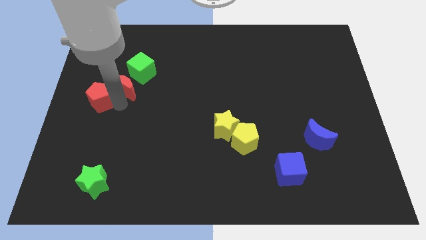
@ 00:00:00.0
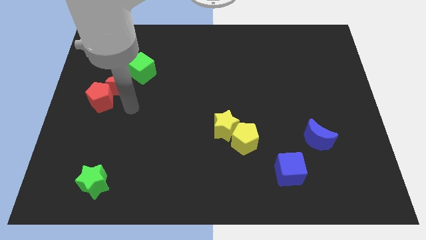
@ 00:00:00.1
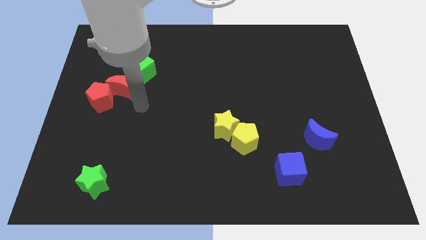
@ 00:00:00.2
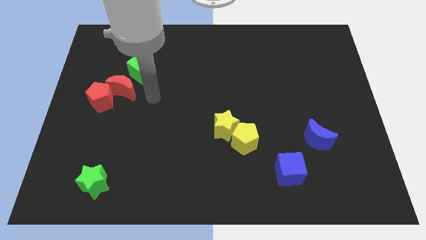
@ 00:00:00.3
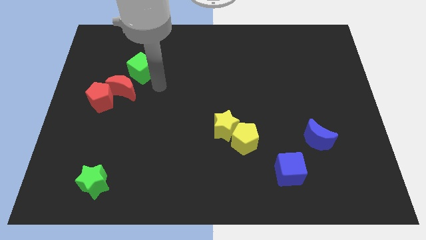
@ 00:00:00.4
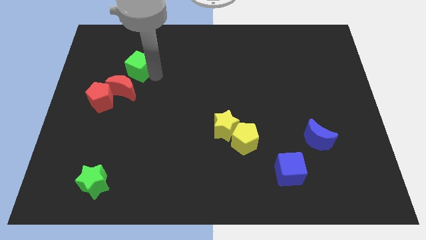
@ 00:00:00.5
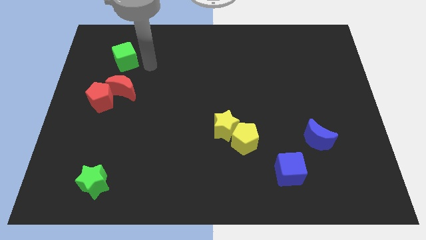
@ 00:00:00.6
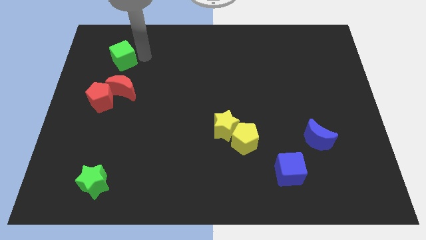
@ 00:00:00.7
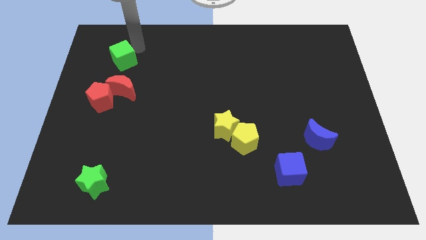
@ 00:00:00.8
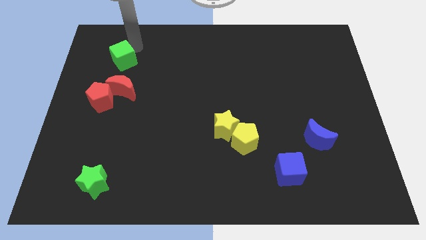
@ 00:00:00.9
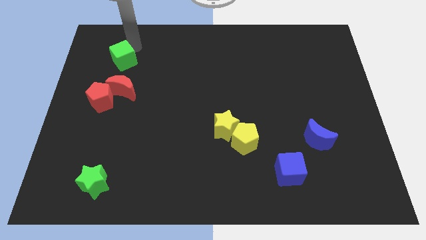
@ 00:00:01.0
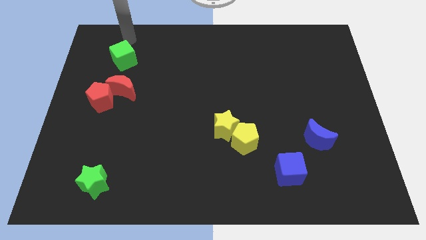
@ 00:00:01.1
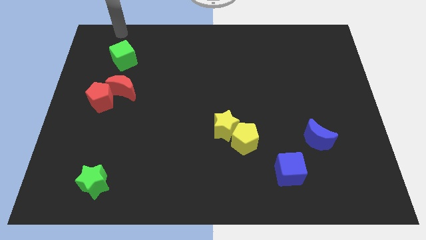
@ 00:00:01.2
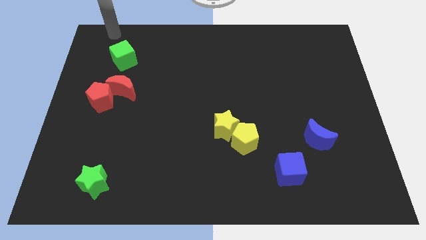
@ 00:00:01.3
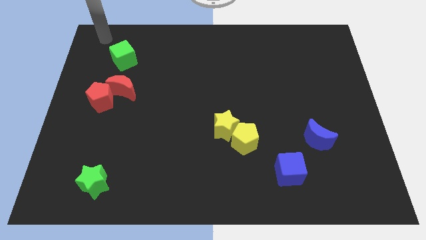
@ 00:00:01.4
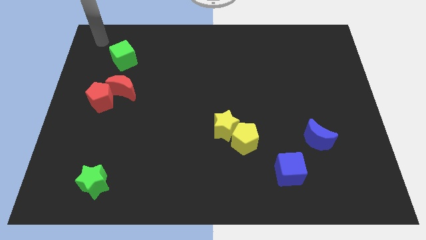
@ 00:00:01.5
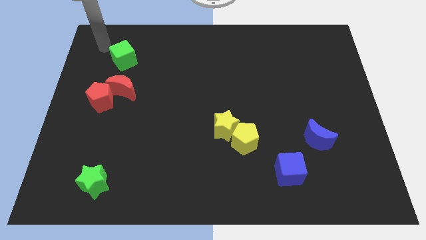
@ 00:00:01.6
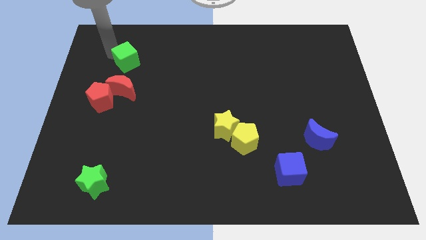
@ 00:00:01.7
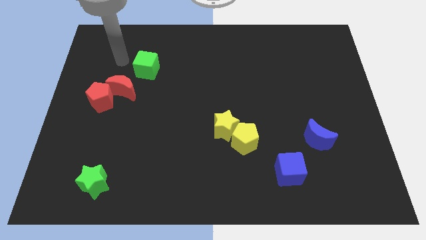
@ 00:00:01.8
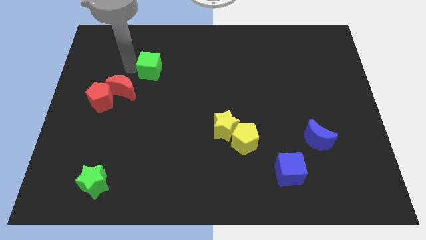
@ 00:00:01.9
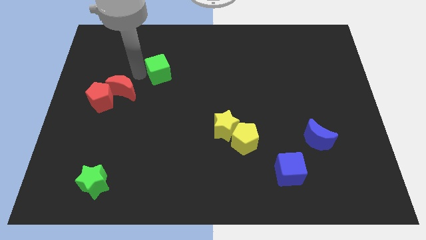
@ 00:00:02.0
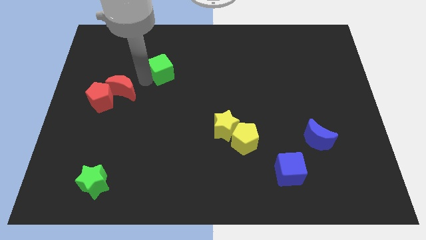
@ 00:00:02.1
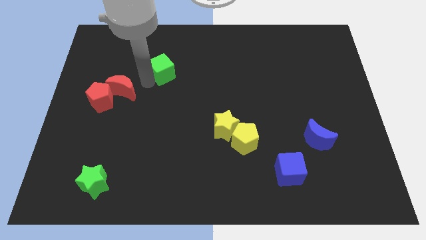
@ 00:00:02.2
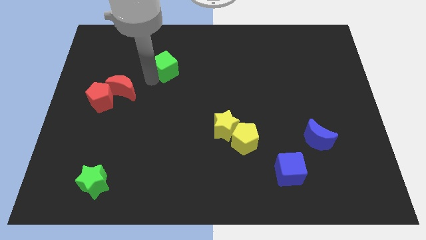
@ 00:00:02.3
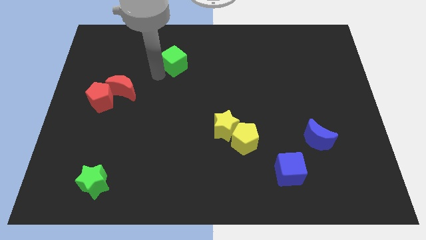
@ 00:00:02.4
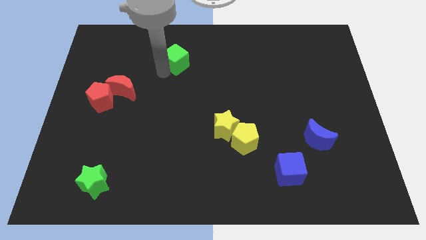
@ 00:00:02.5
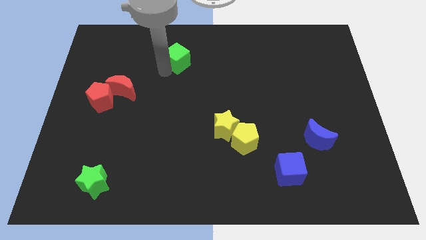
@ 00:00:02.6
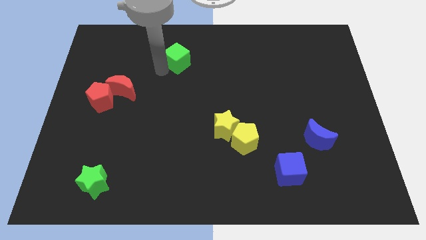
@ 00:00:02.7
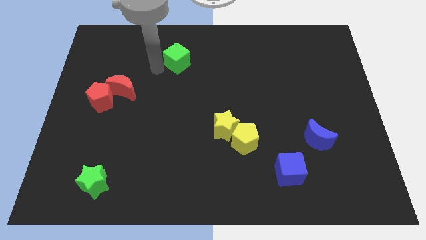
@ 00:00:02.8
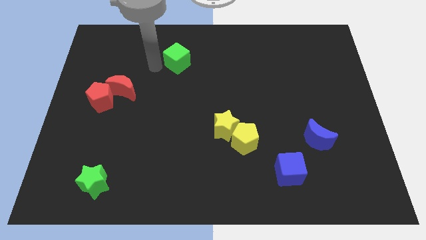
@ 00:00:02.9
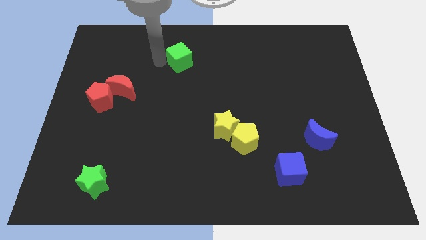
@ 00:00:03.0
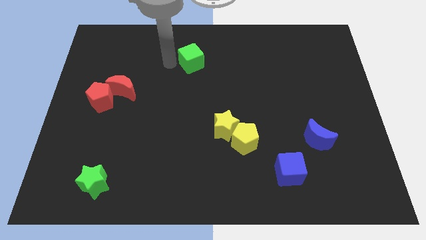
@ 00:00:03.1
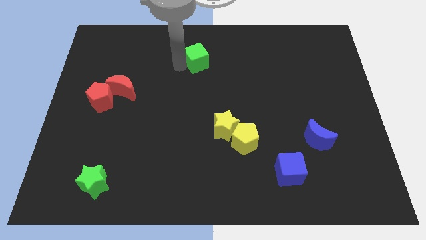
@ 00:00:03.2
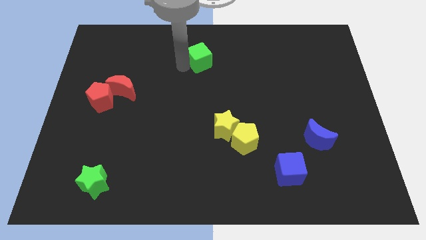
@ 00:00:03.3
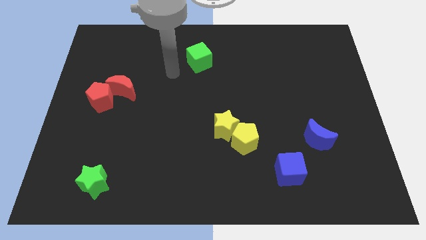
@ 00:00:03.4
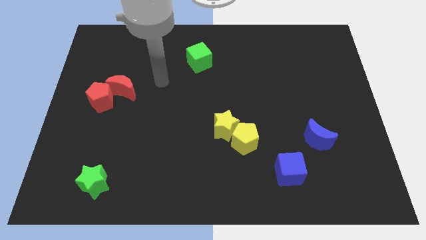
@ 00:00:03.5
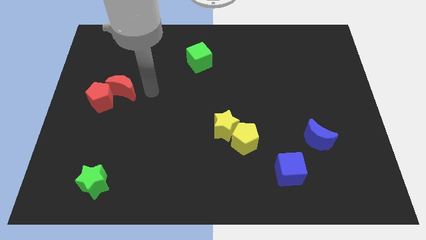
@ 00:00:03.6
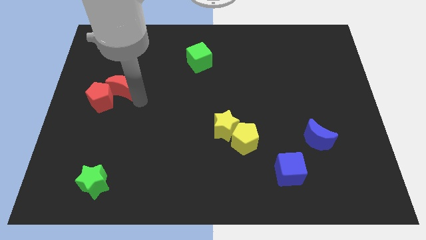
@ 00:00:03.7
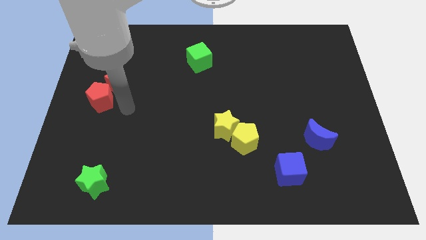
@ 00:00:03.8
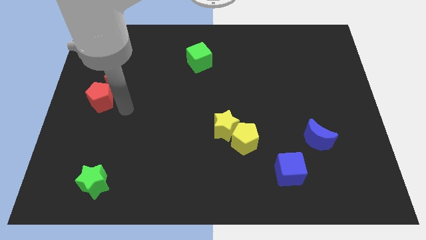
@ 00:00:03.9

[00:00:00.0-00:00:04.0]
push the green cube towards the top side of the board

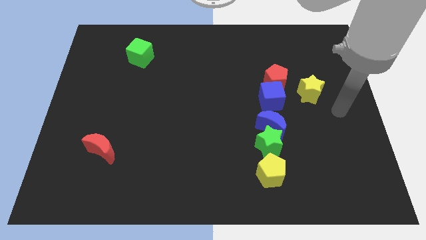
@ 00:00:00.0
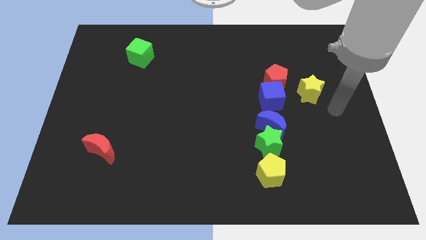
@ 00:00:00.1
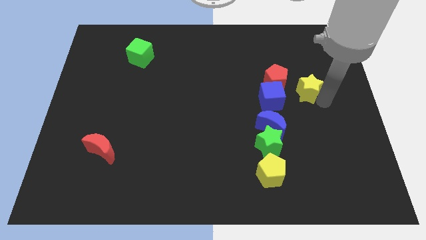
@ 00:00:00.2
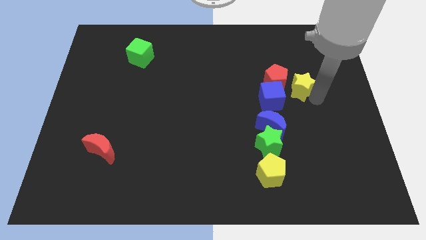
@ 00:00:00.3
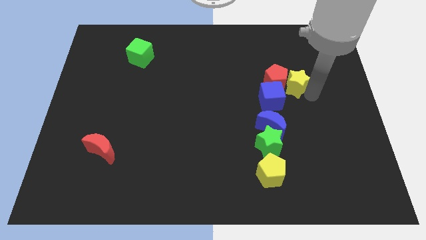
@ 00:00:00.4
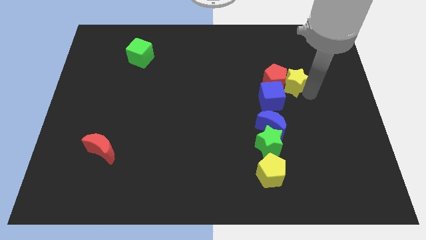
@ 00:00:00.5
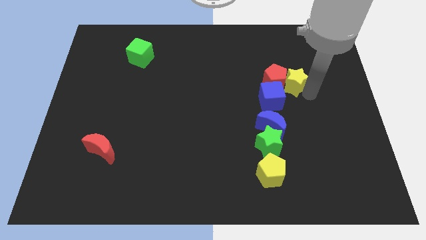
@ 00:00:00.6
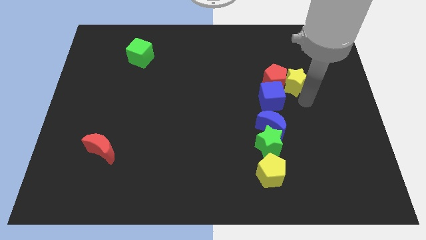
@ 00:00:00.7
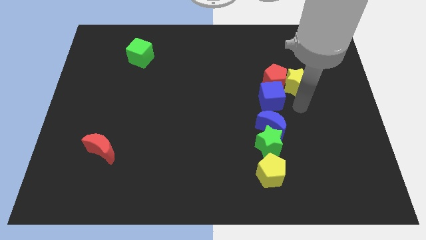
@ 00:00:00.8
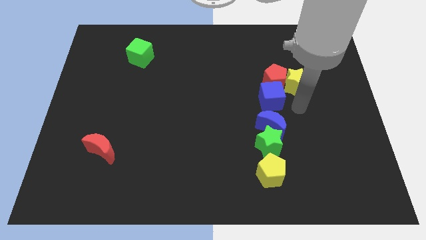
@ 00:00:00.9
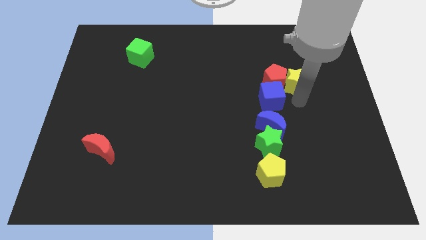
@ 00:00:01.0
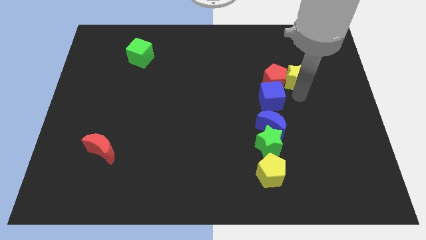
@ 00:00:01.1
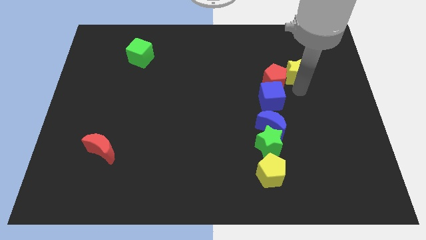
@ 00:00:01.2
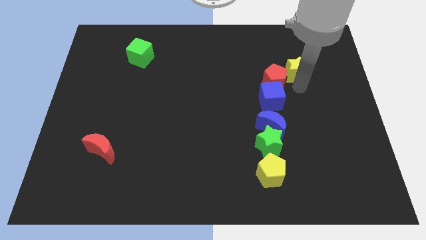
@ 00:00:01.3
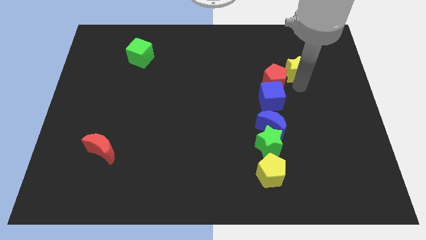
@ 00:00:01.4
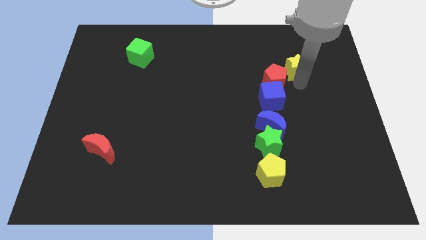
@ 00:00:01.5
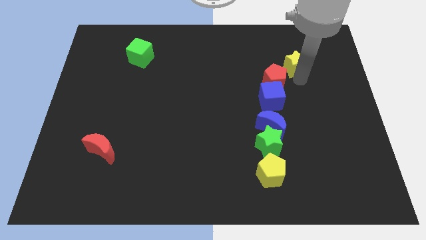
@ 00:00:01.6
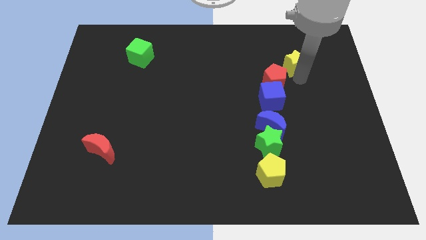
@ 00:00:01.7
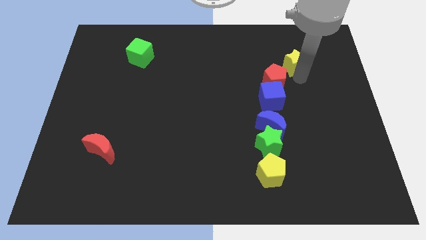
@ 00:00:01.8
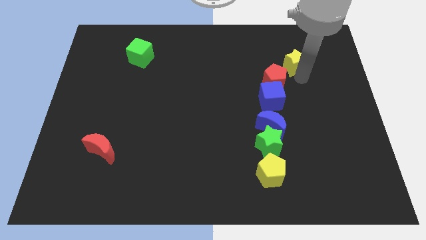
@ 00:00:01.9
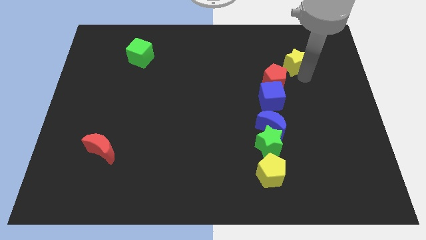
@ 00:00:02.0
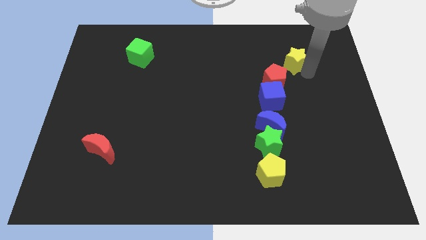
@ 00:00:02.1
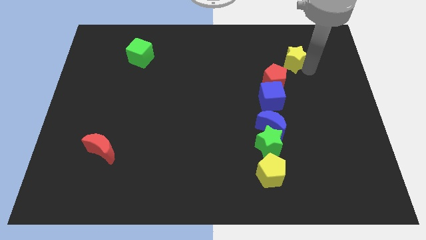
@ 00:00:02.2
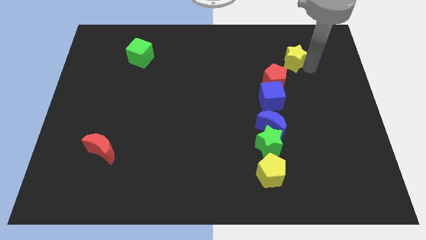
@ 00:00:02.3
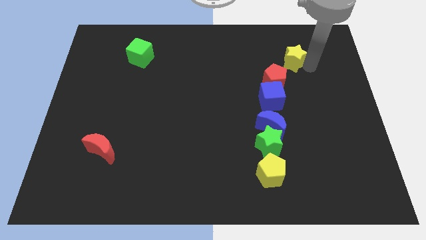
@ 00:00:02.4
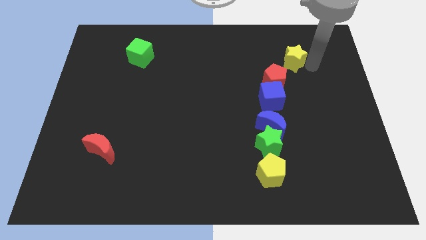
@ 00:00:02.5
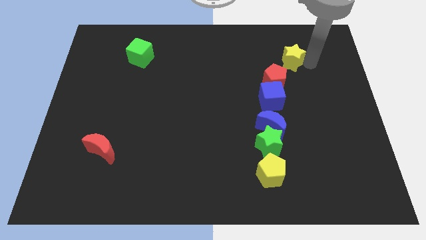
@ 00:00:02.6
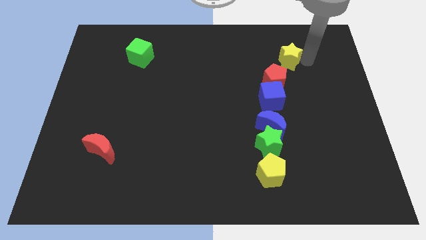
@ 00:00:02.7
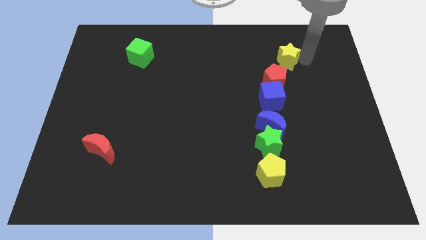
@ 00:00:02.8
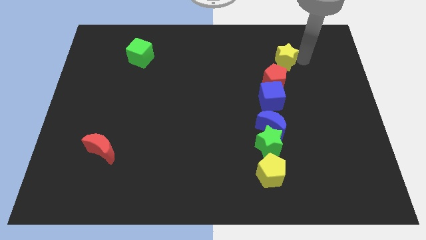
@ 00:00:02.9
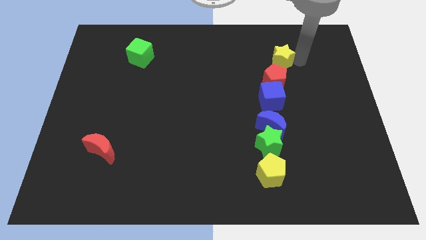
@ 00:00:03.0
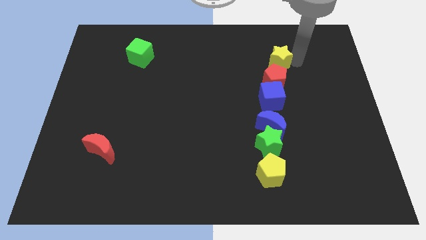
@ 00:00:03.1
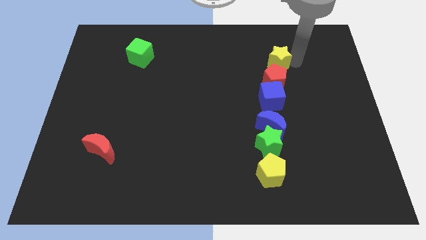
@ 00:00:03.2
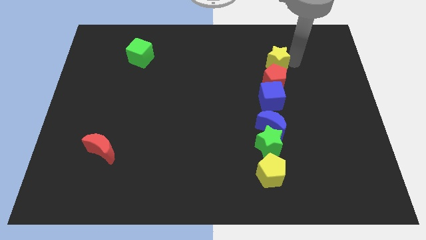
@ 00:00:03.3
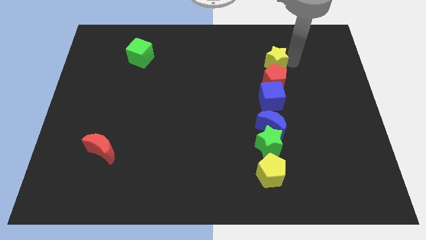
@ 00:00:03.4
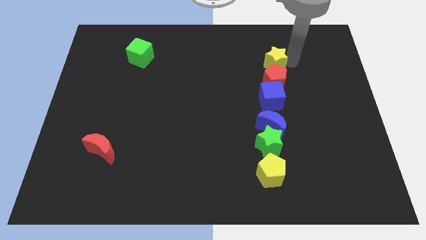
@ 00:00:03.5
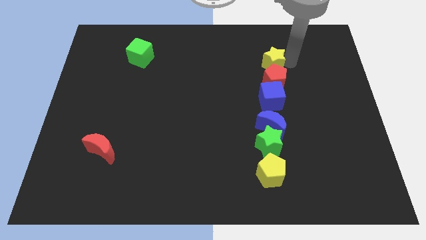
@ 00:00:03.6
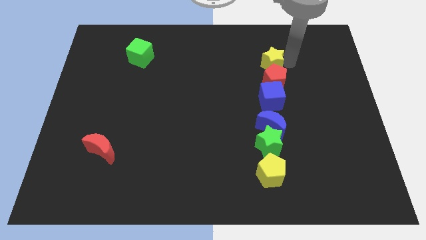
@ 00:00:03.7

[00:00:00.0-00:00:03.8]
move the yellow star to the top of the red pentagon

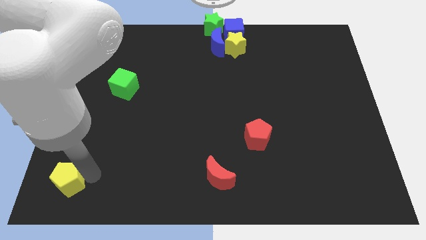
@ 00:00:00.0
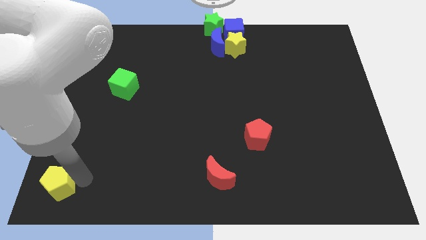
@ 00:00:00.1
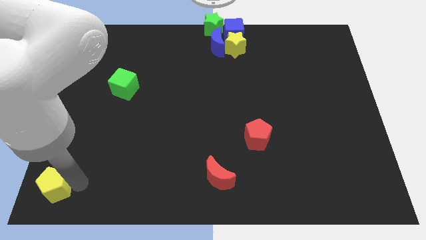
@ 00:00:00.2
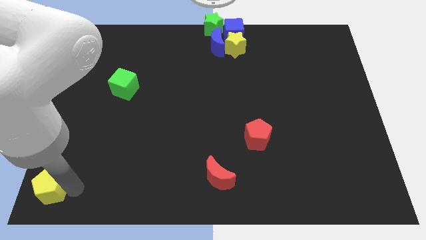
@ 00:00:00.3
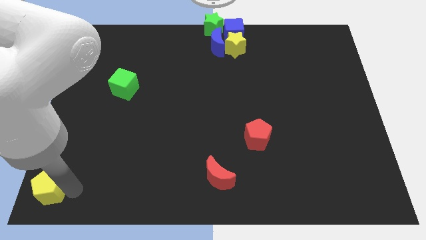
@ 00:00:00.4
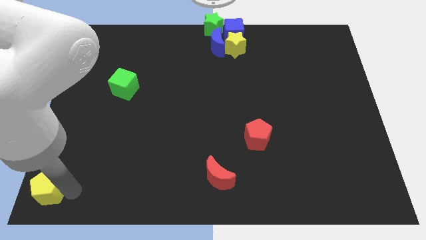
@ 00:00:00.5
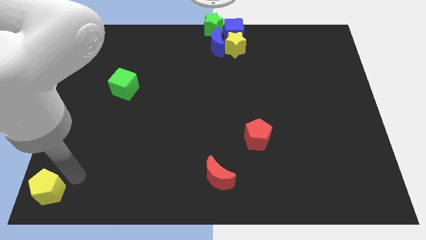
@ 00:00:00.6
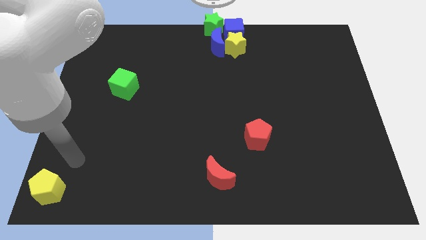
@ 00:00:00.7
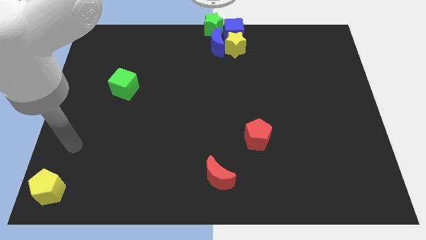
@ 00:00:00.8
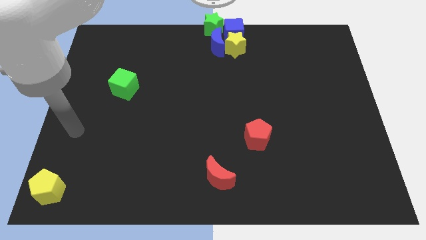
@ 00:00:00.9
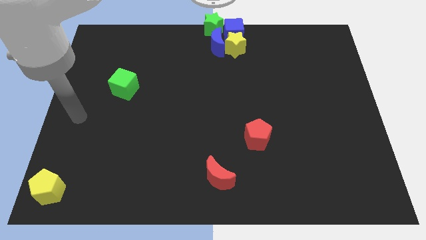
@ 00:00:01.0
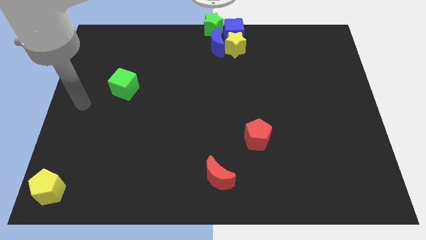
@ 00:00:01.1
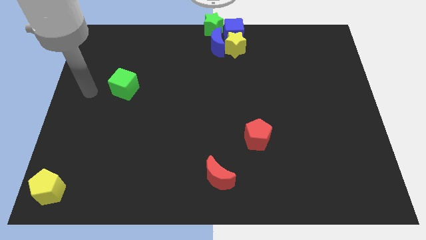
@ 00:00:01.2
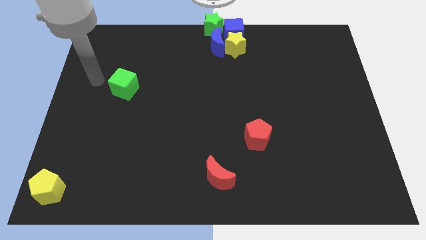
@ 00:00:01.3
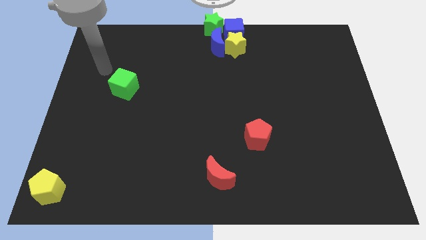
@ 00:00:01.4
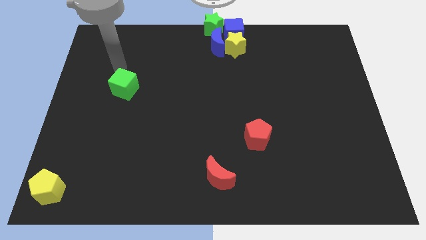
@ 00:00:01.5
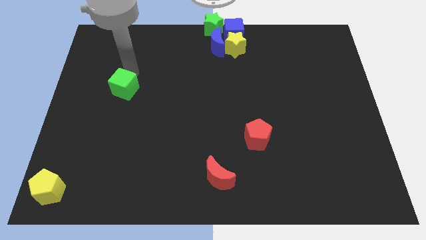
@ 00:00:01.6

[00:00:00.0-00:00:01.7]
place the arm above the green cube
